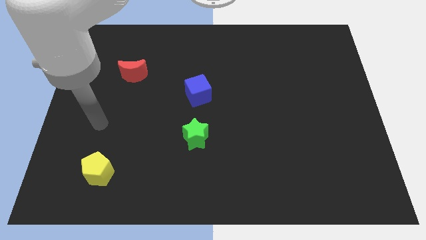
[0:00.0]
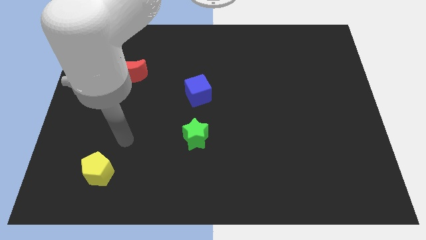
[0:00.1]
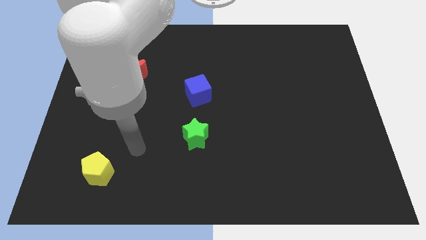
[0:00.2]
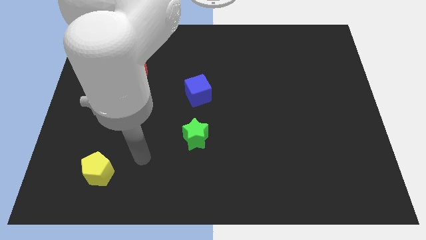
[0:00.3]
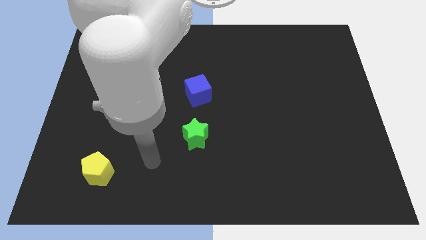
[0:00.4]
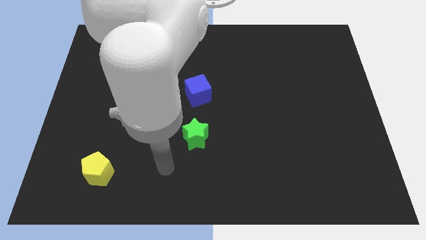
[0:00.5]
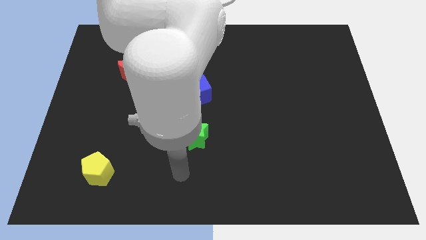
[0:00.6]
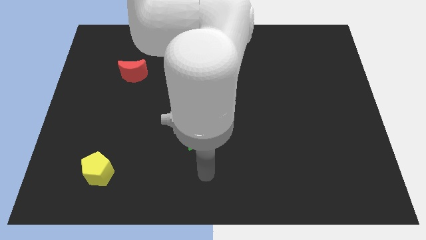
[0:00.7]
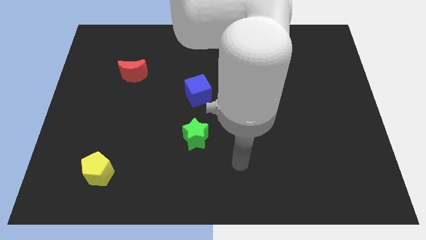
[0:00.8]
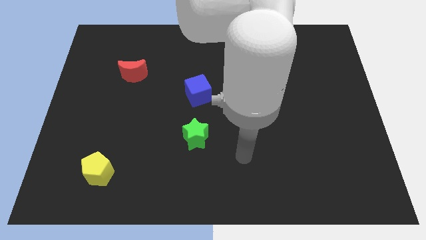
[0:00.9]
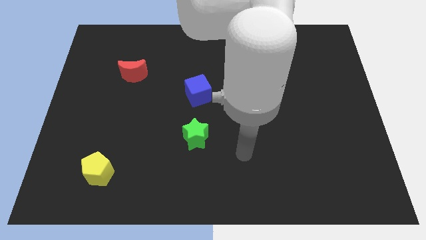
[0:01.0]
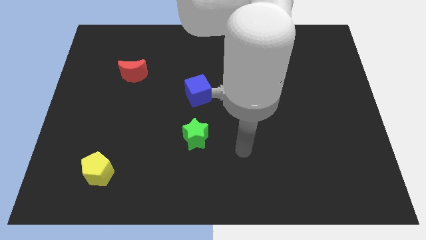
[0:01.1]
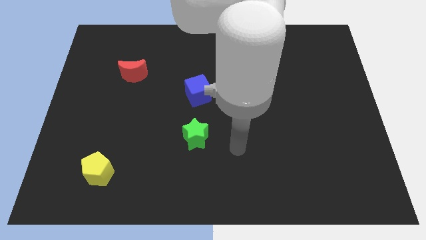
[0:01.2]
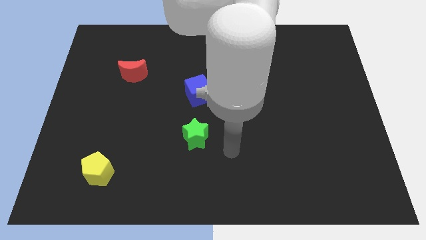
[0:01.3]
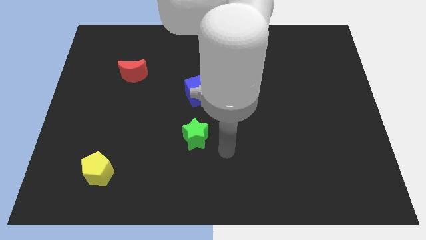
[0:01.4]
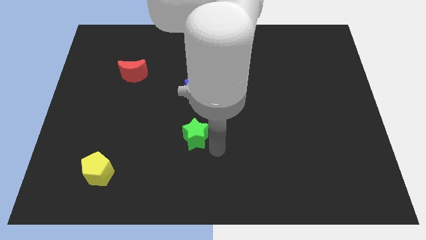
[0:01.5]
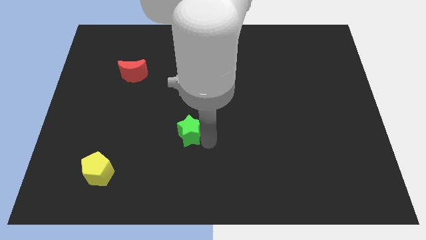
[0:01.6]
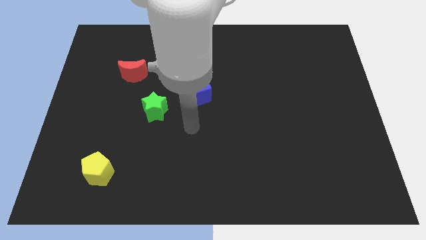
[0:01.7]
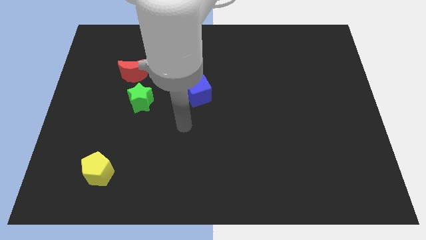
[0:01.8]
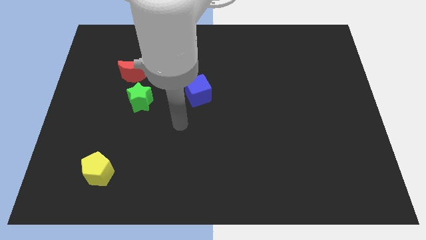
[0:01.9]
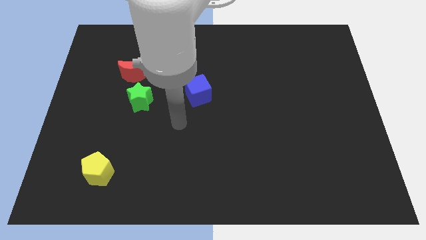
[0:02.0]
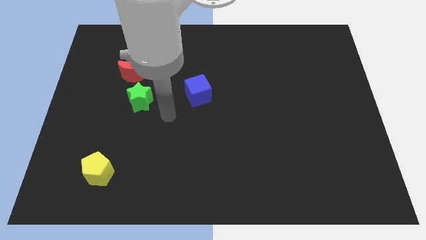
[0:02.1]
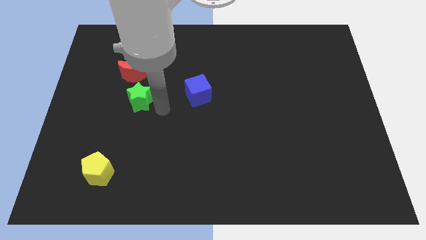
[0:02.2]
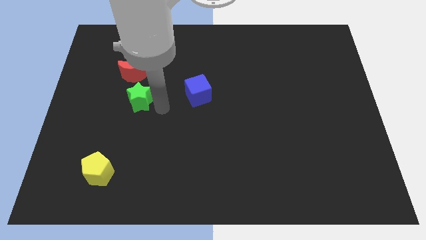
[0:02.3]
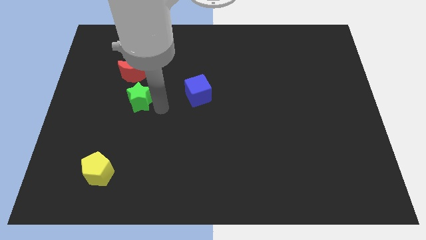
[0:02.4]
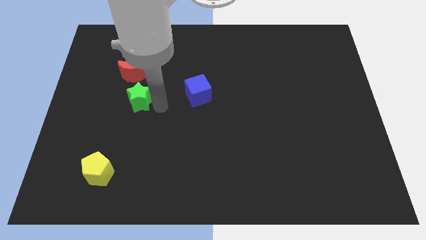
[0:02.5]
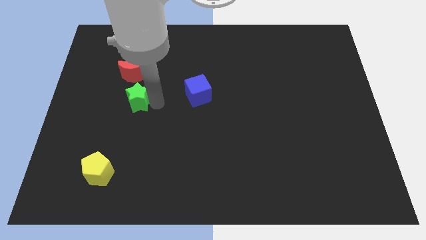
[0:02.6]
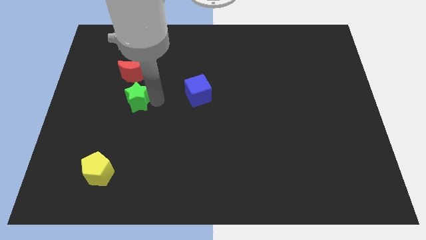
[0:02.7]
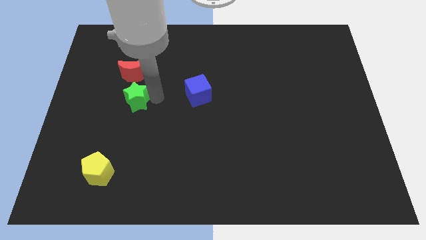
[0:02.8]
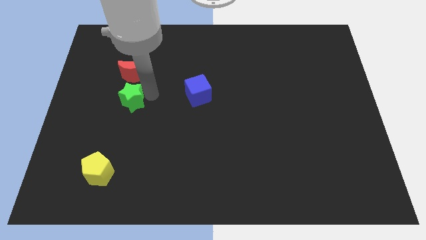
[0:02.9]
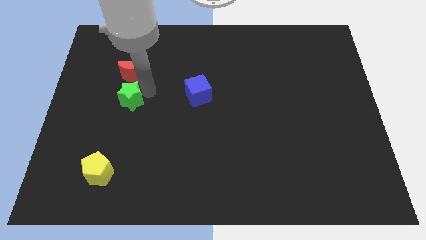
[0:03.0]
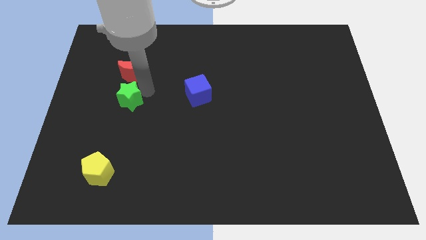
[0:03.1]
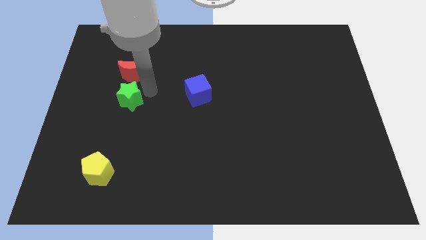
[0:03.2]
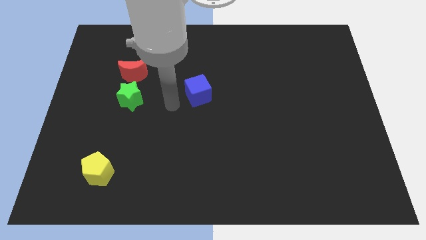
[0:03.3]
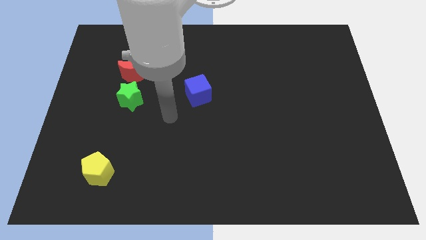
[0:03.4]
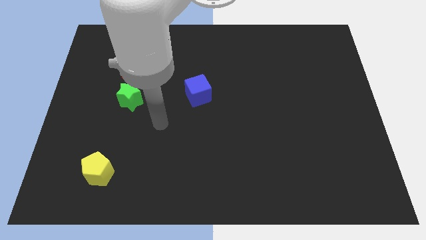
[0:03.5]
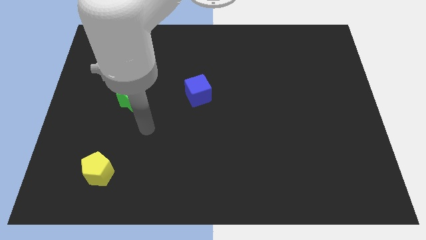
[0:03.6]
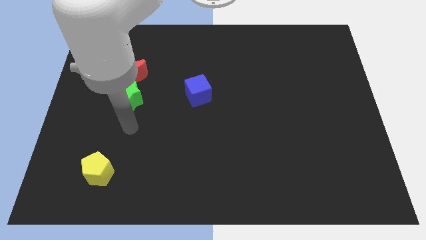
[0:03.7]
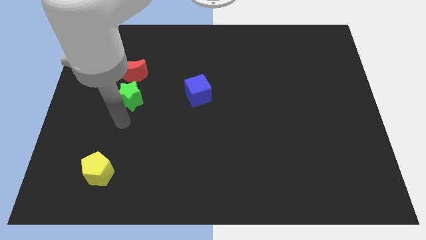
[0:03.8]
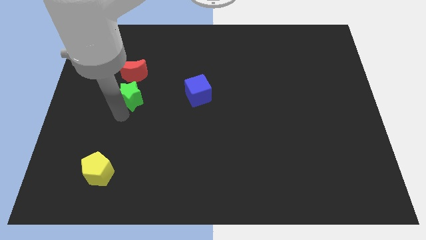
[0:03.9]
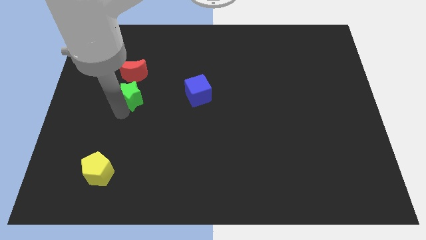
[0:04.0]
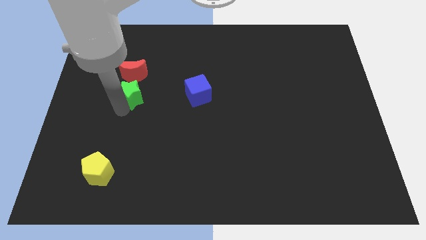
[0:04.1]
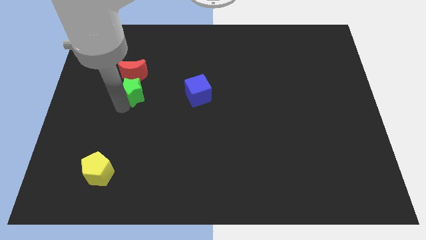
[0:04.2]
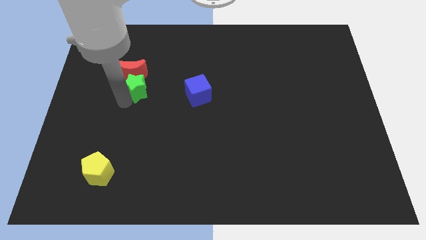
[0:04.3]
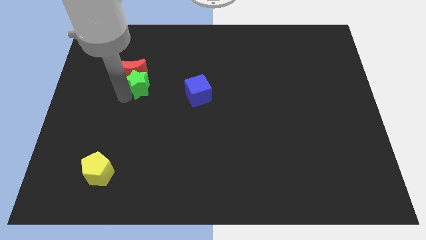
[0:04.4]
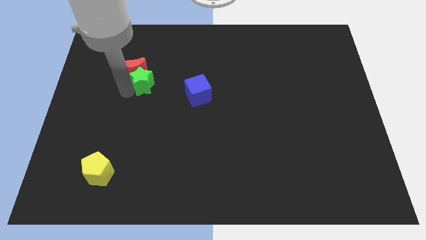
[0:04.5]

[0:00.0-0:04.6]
push the green star towards the moon

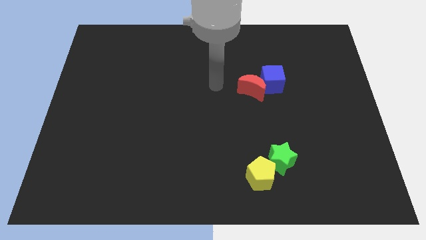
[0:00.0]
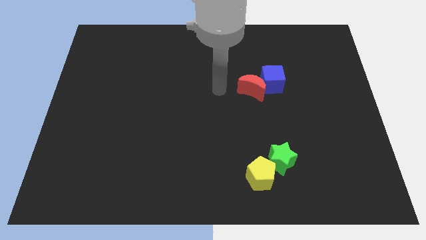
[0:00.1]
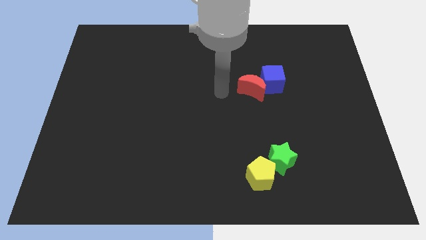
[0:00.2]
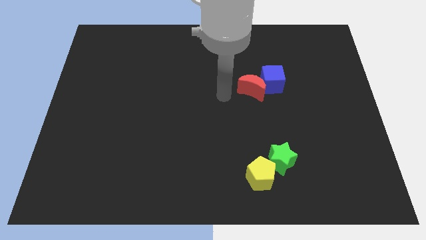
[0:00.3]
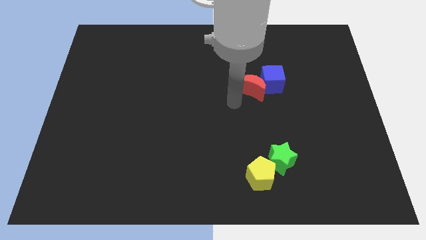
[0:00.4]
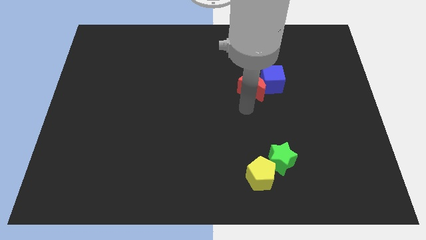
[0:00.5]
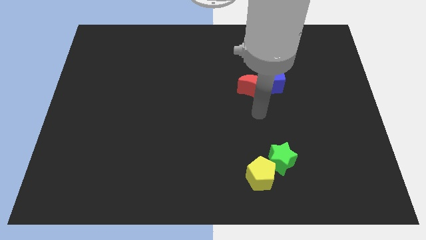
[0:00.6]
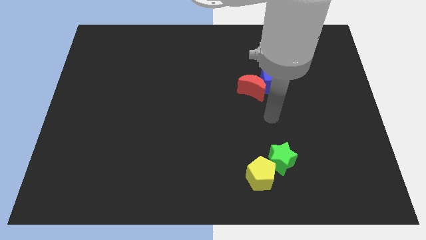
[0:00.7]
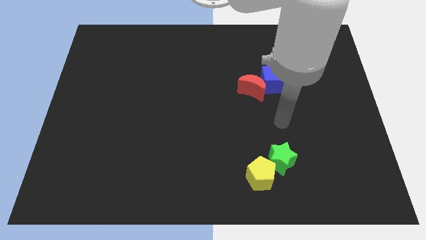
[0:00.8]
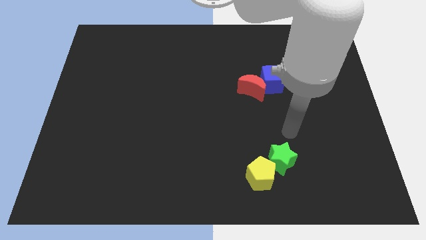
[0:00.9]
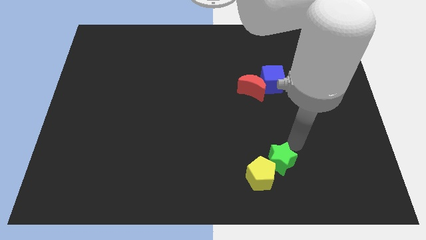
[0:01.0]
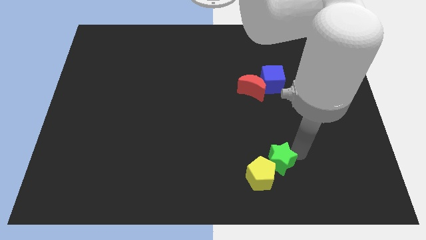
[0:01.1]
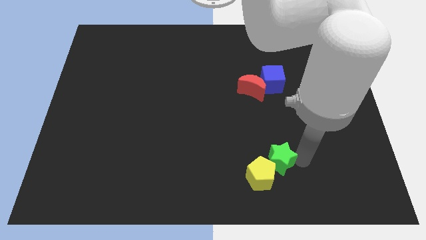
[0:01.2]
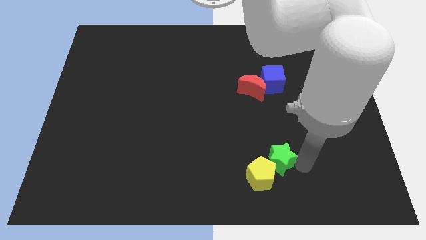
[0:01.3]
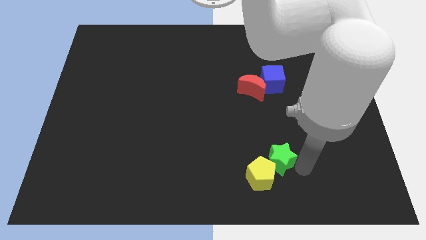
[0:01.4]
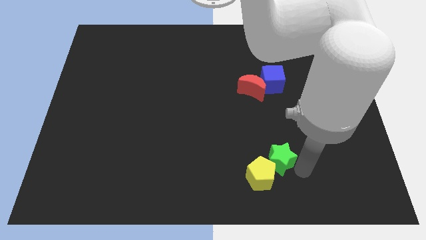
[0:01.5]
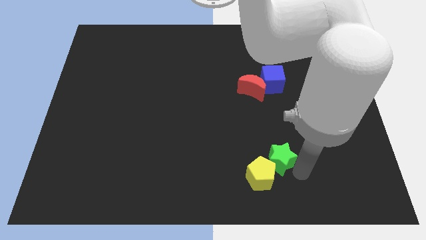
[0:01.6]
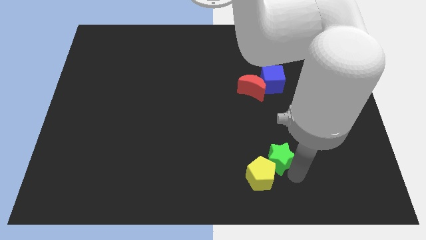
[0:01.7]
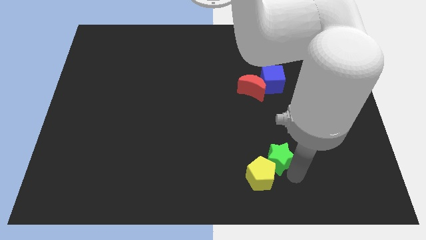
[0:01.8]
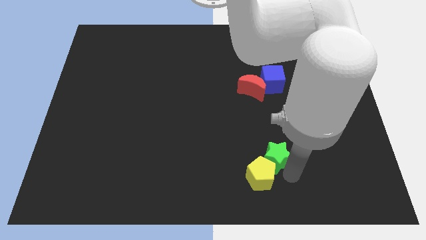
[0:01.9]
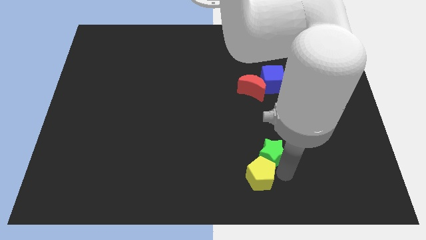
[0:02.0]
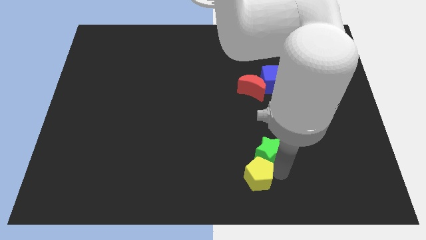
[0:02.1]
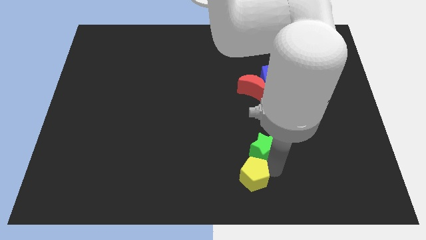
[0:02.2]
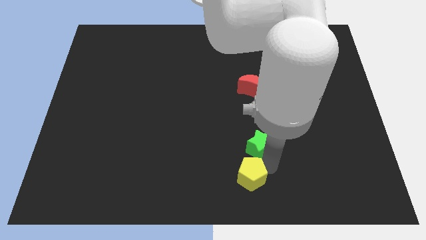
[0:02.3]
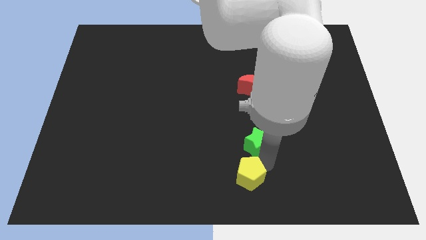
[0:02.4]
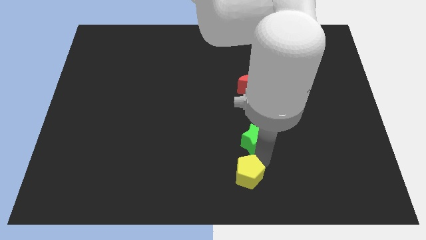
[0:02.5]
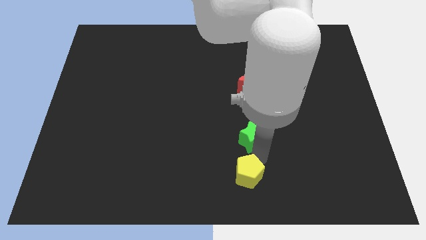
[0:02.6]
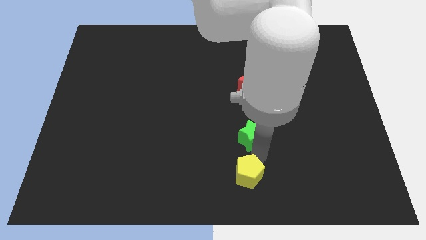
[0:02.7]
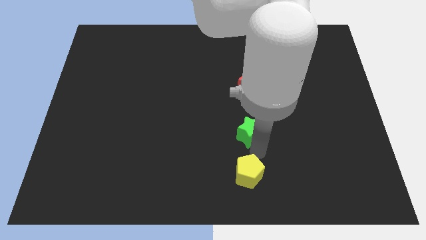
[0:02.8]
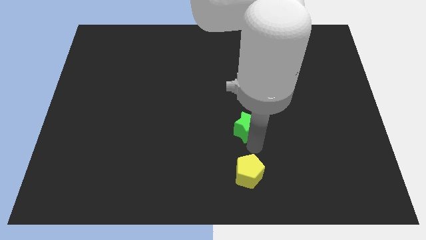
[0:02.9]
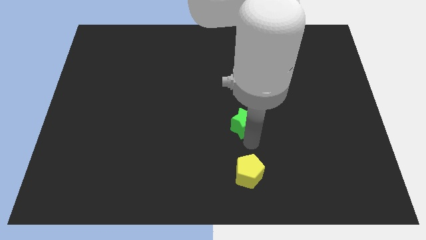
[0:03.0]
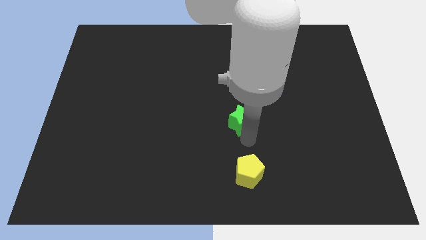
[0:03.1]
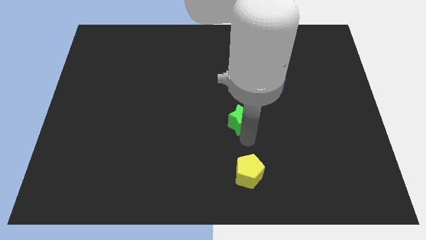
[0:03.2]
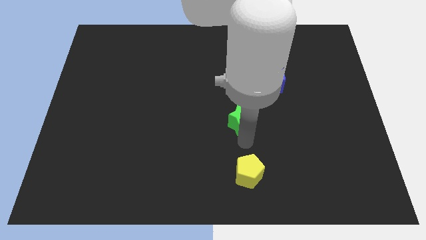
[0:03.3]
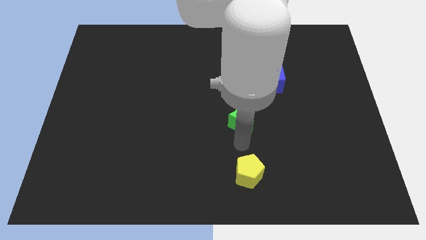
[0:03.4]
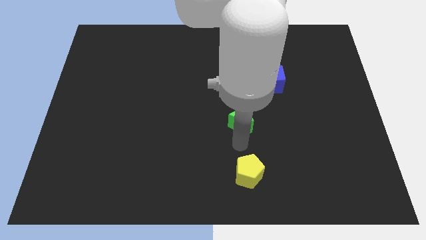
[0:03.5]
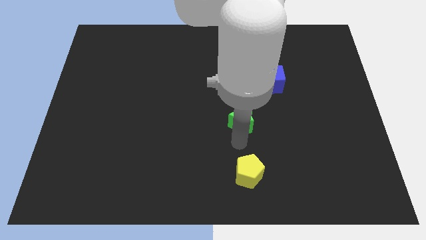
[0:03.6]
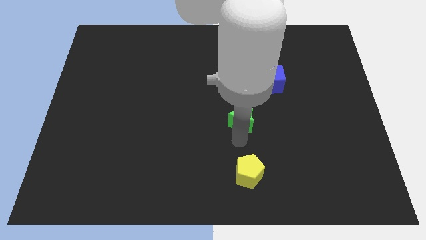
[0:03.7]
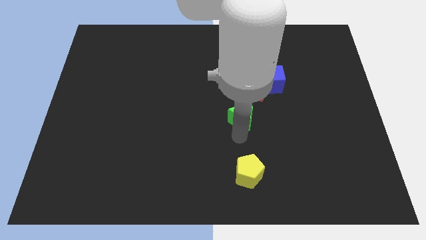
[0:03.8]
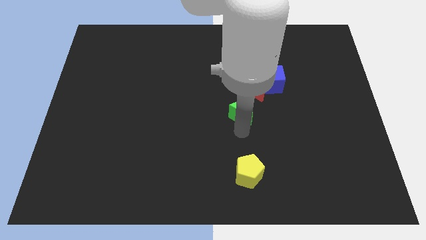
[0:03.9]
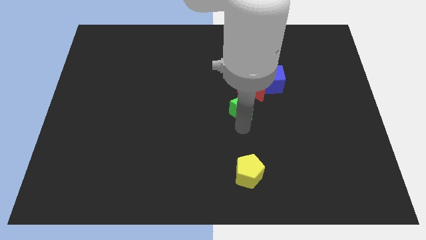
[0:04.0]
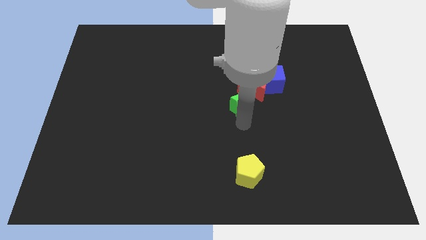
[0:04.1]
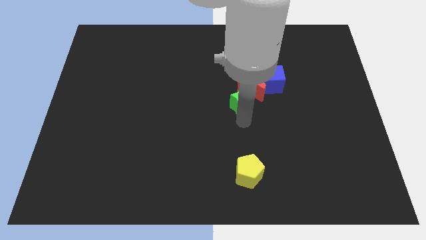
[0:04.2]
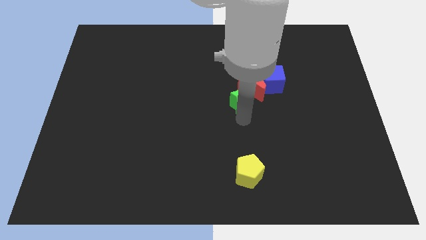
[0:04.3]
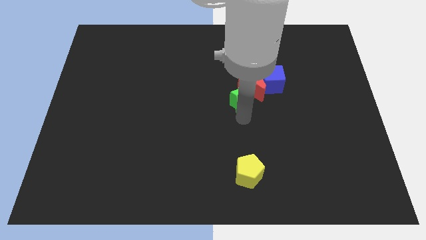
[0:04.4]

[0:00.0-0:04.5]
push the green block next to the moon
